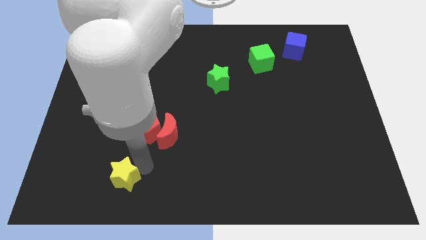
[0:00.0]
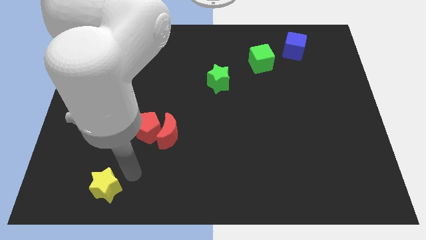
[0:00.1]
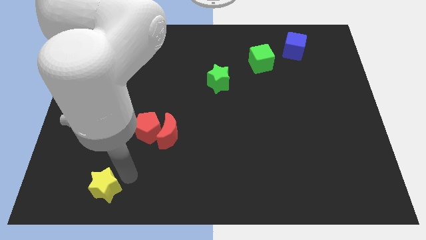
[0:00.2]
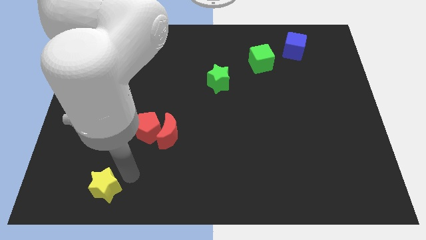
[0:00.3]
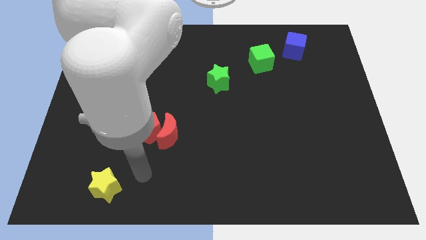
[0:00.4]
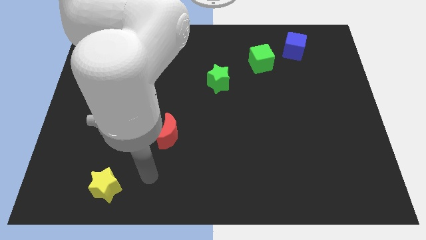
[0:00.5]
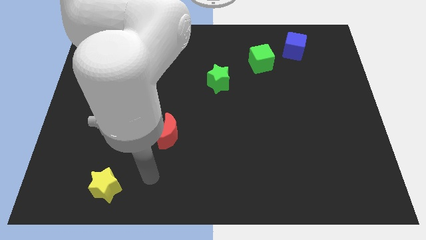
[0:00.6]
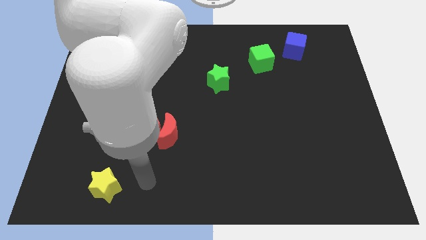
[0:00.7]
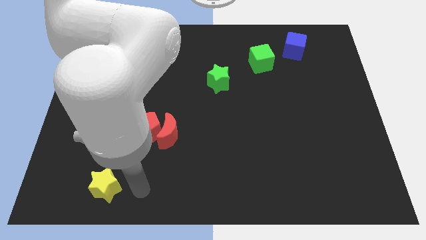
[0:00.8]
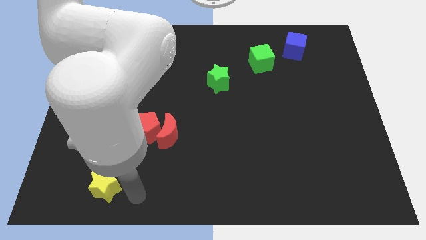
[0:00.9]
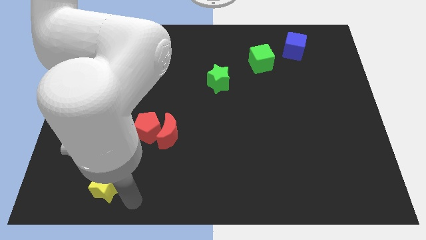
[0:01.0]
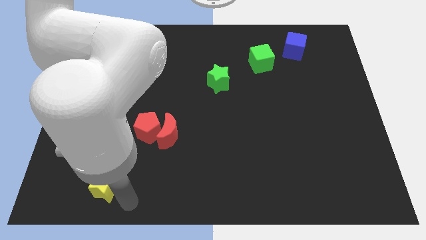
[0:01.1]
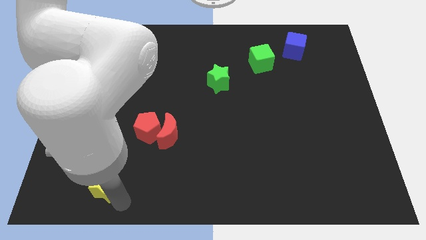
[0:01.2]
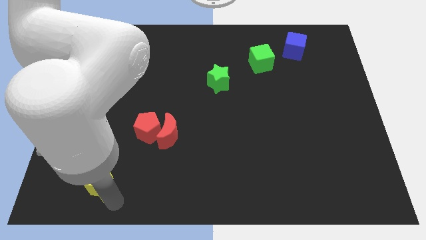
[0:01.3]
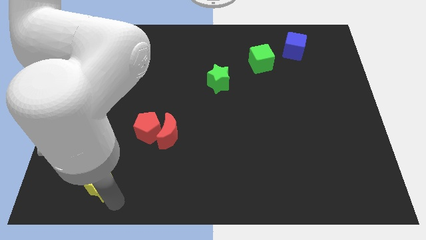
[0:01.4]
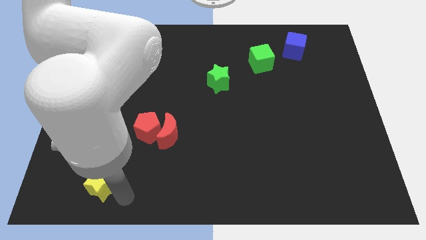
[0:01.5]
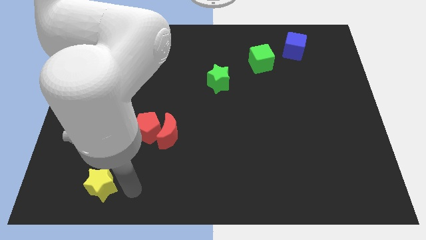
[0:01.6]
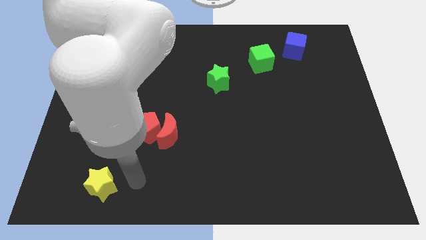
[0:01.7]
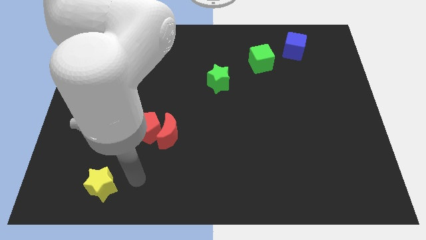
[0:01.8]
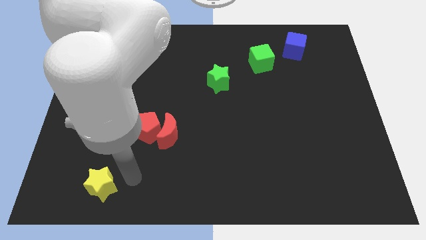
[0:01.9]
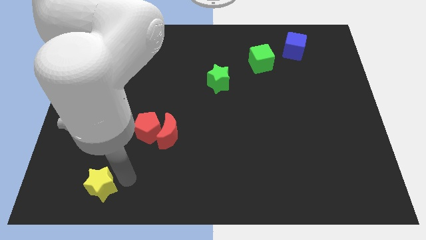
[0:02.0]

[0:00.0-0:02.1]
push yellow star towards bottom left

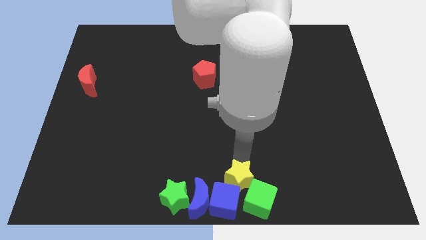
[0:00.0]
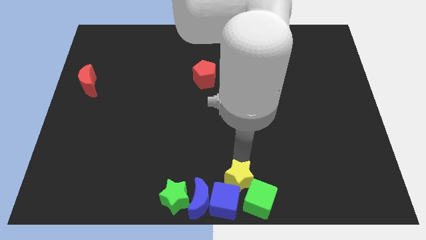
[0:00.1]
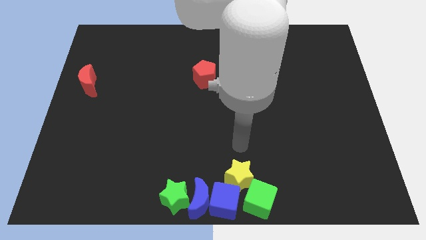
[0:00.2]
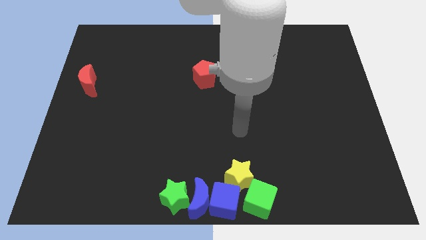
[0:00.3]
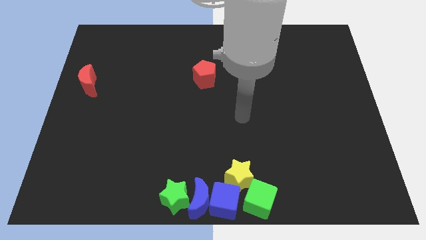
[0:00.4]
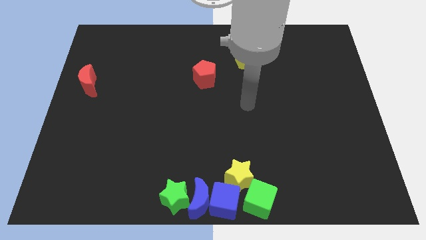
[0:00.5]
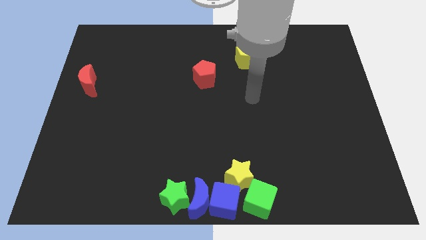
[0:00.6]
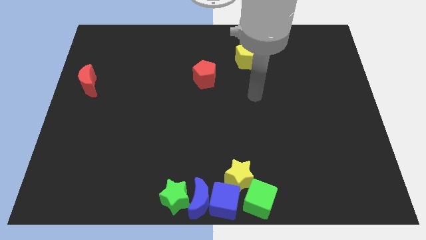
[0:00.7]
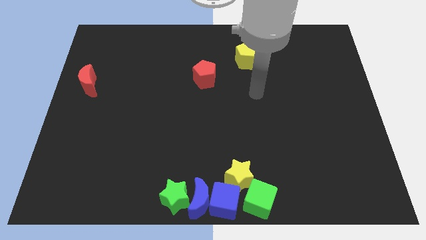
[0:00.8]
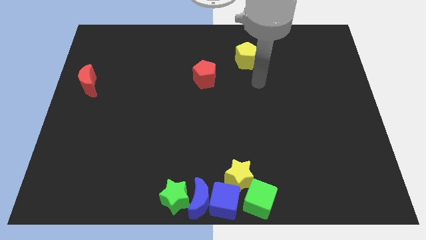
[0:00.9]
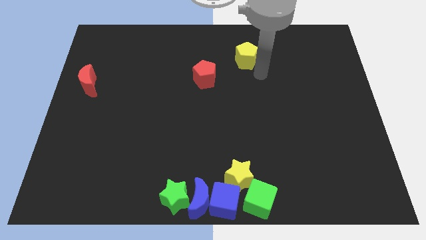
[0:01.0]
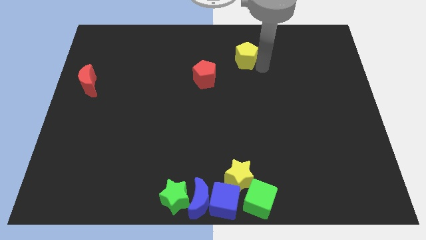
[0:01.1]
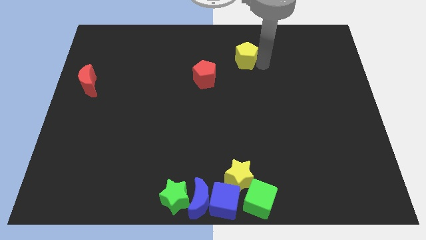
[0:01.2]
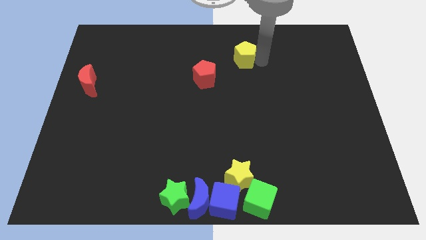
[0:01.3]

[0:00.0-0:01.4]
move your arm to the right of the yellow pentagon

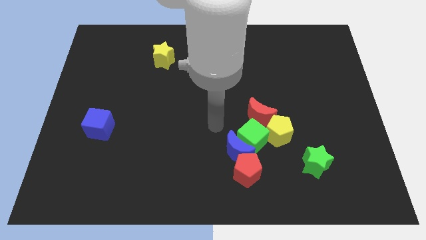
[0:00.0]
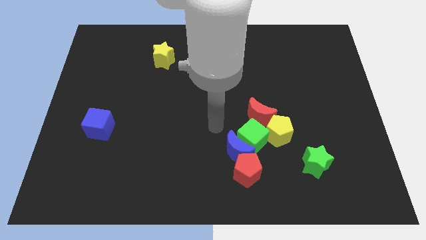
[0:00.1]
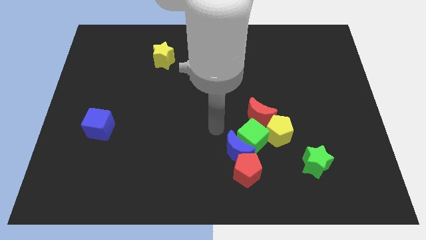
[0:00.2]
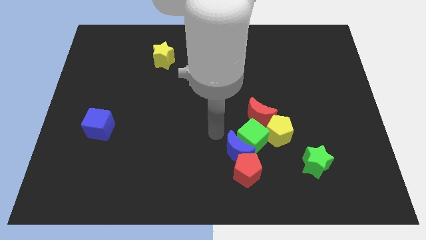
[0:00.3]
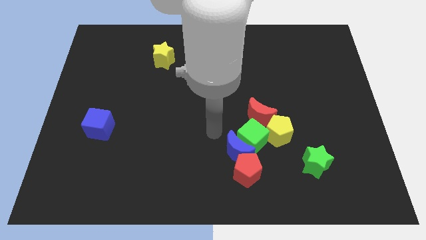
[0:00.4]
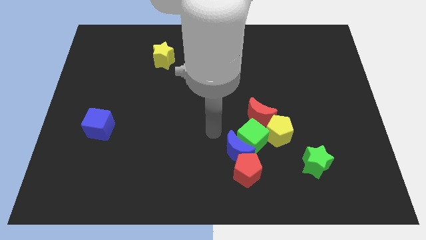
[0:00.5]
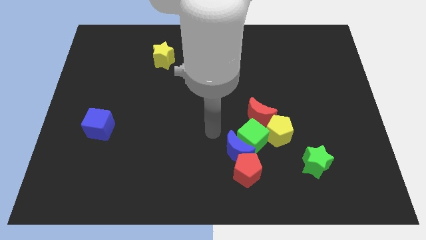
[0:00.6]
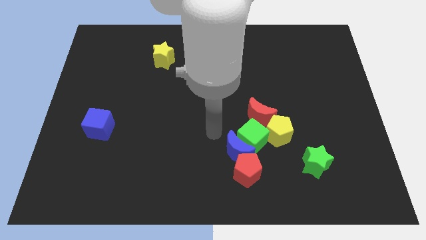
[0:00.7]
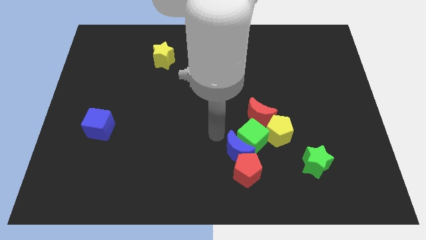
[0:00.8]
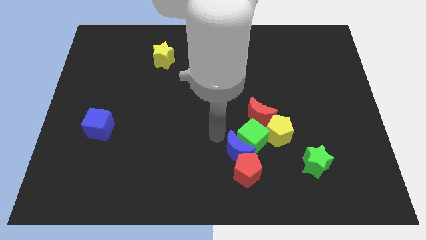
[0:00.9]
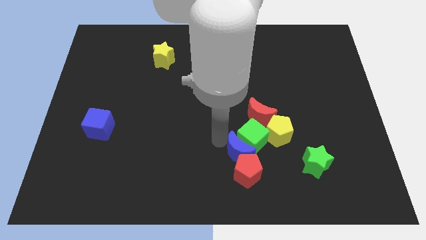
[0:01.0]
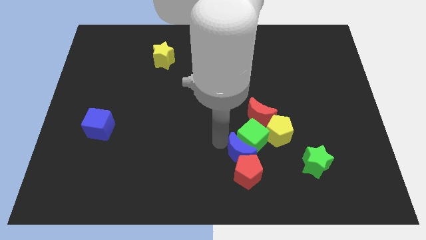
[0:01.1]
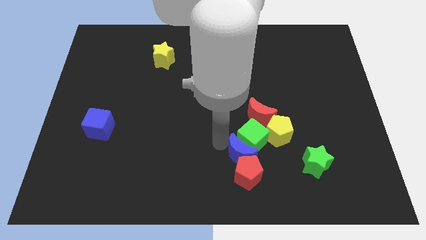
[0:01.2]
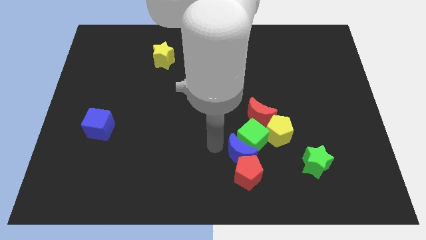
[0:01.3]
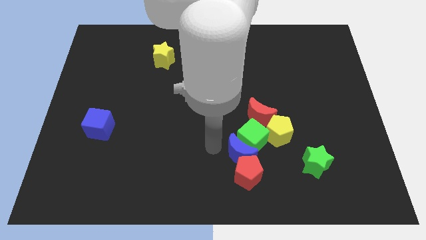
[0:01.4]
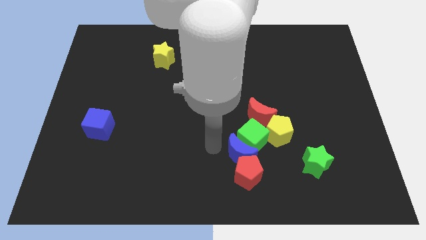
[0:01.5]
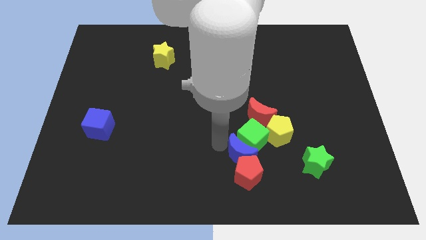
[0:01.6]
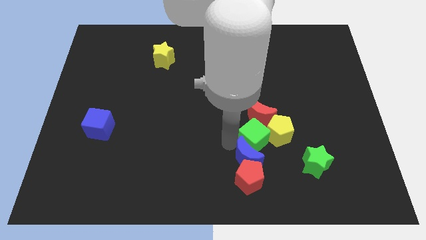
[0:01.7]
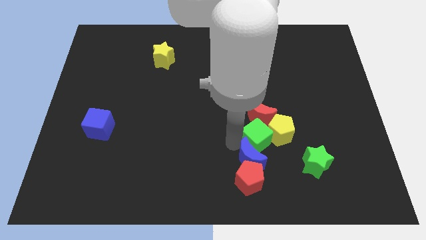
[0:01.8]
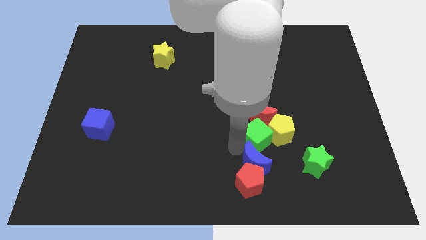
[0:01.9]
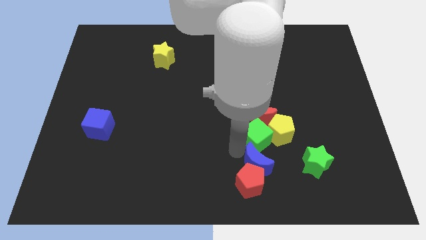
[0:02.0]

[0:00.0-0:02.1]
slide blue moon in between green cube and red pentagon

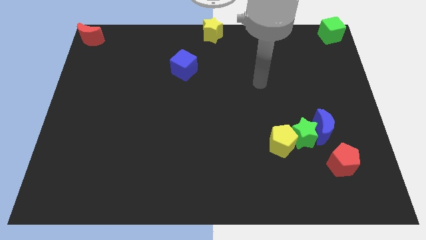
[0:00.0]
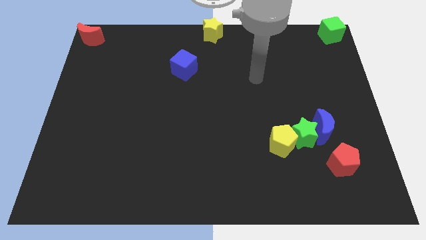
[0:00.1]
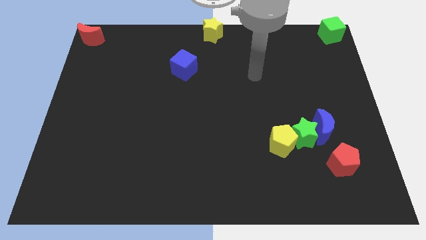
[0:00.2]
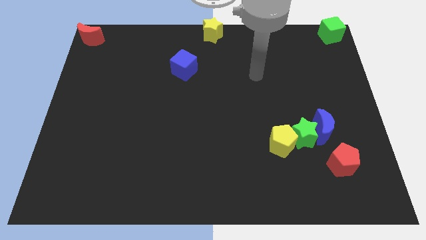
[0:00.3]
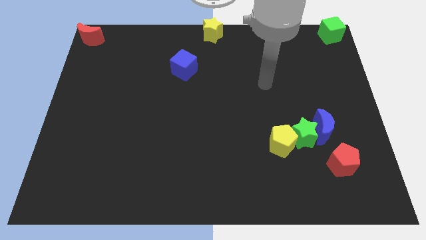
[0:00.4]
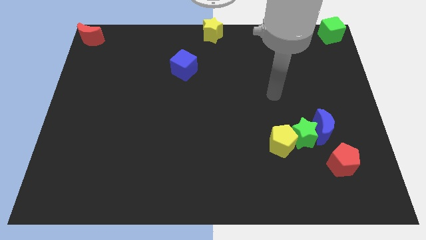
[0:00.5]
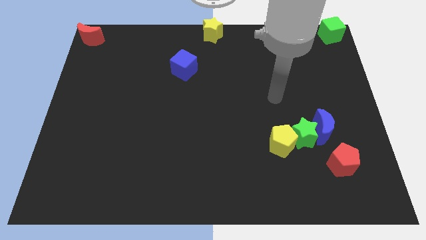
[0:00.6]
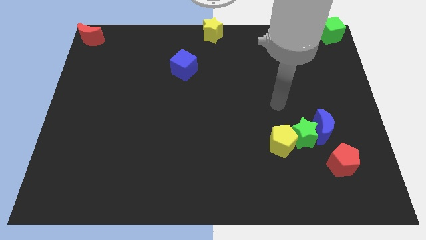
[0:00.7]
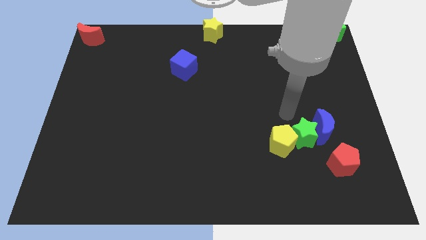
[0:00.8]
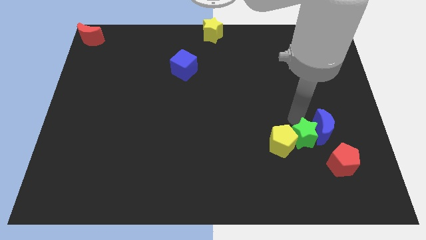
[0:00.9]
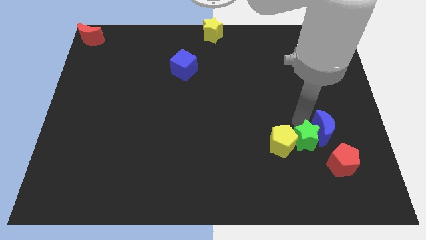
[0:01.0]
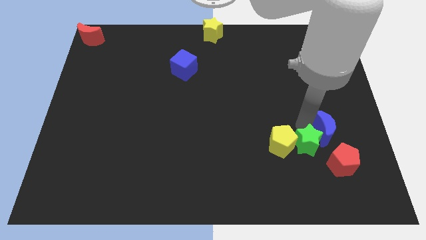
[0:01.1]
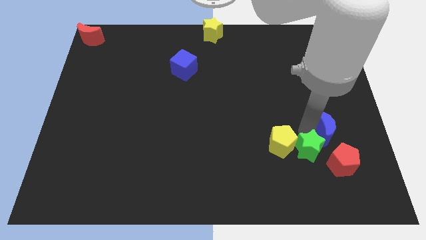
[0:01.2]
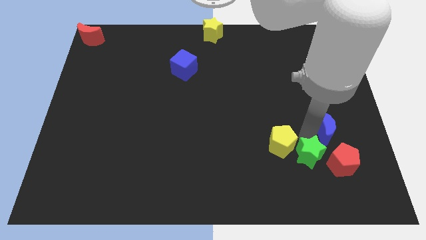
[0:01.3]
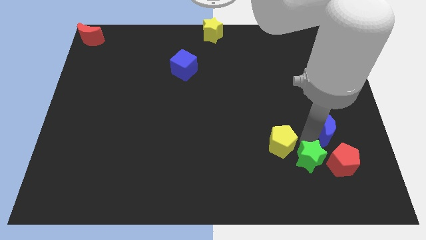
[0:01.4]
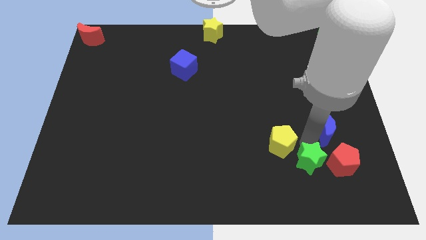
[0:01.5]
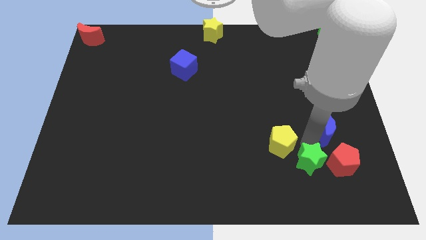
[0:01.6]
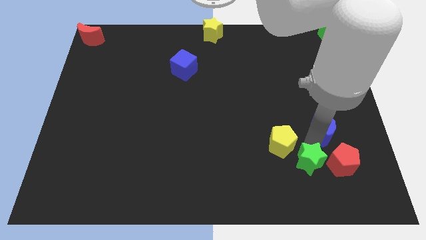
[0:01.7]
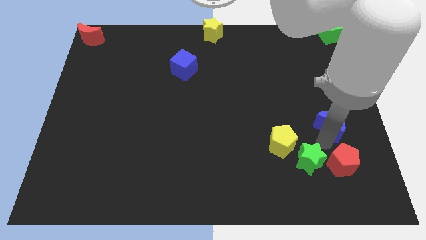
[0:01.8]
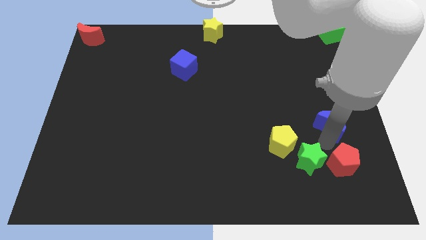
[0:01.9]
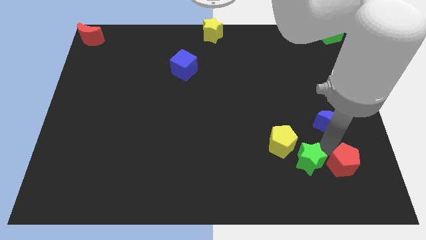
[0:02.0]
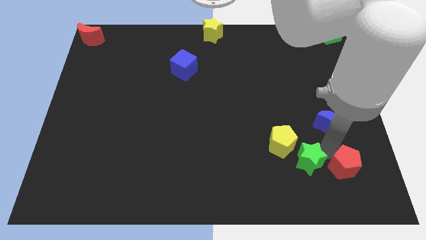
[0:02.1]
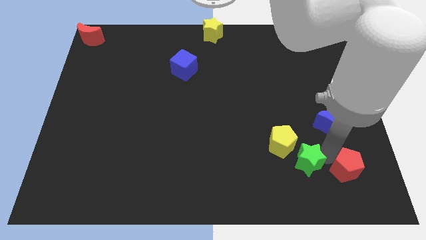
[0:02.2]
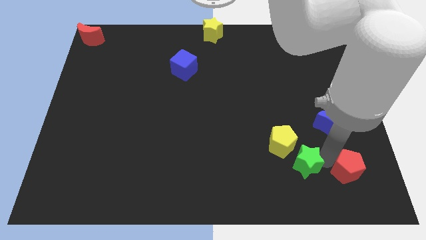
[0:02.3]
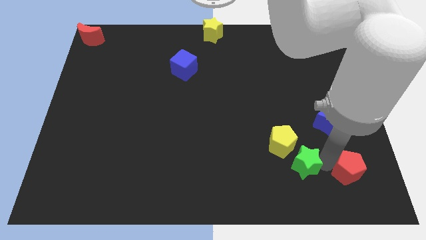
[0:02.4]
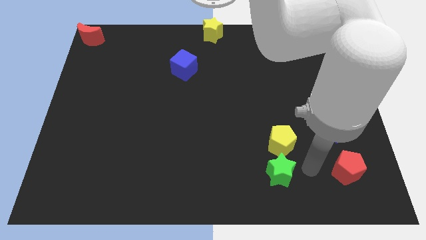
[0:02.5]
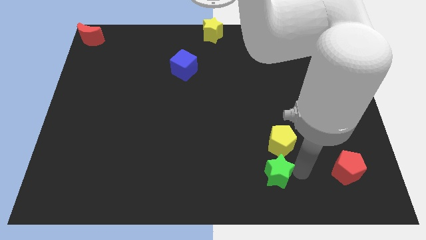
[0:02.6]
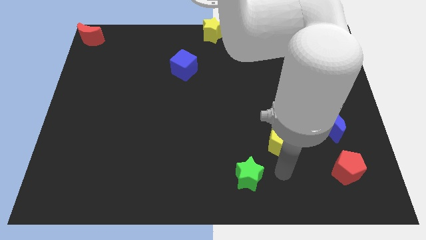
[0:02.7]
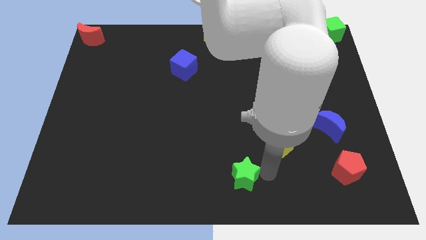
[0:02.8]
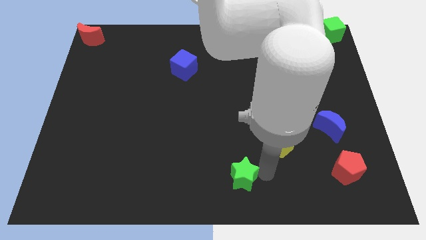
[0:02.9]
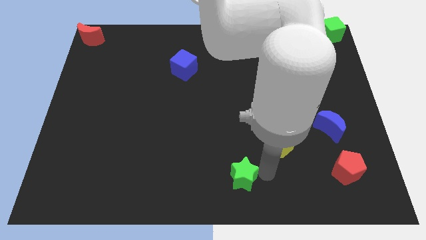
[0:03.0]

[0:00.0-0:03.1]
move the green star to the bottom left of the yellow pentagon

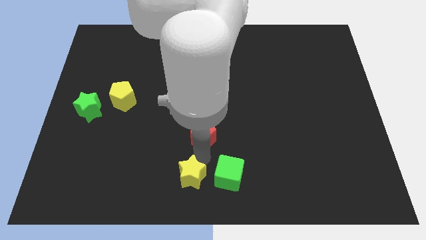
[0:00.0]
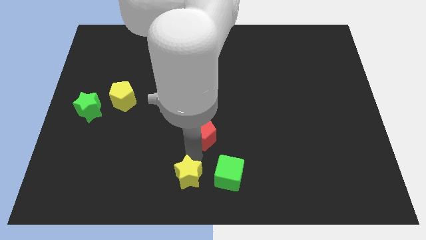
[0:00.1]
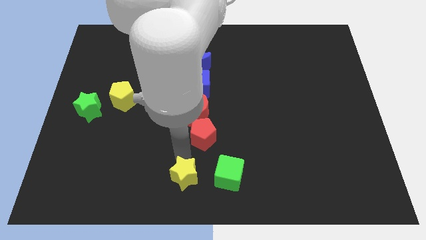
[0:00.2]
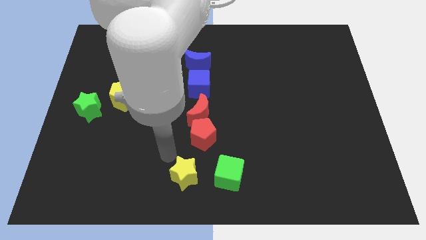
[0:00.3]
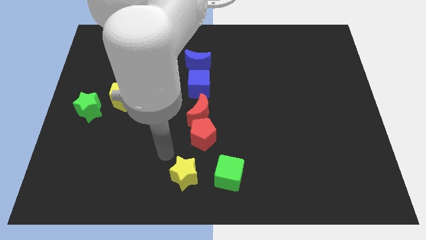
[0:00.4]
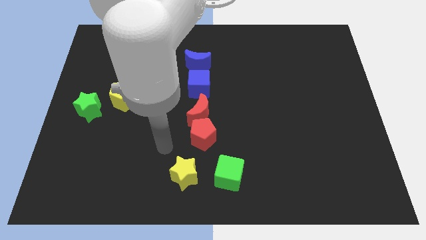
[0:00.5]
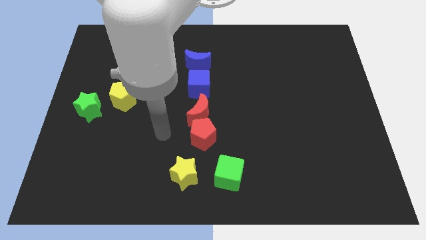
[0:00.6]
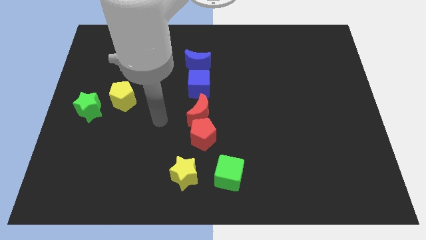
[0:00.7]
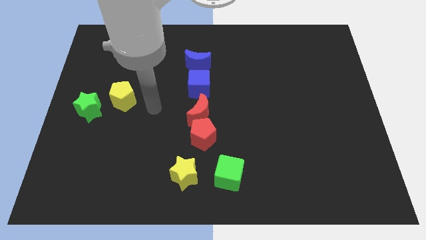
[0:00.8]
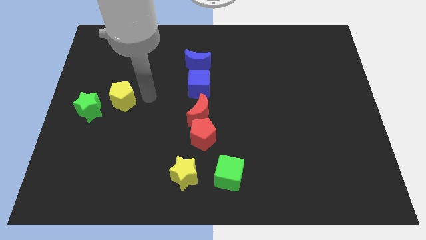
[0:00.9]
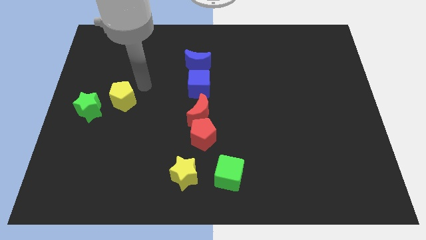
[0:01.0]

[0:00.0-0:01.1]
move yellow pentagon slightly to the left
